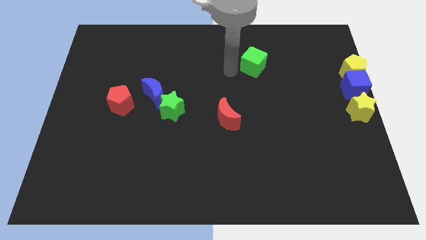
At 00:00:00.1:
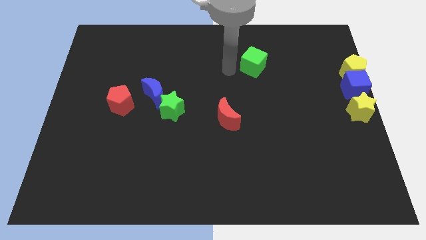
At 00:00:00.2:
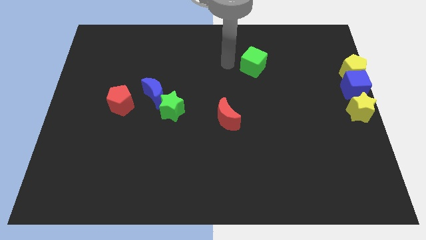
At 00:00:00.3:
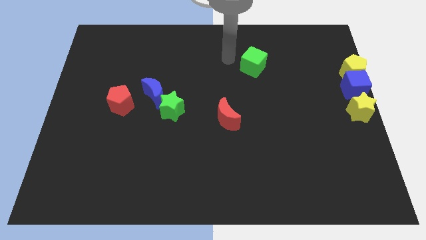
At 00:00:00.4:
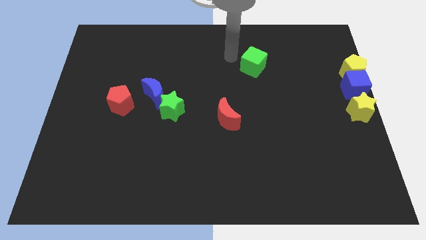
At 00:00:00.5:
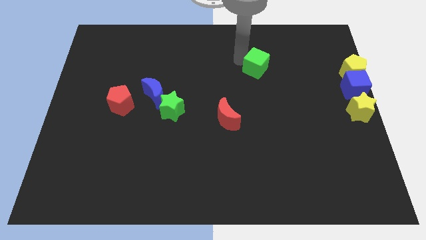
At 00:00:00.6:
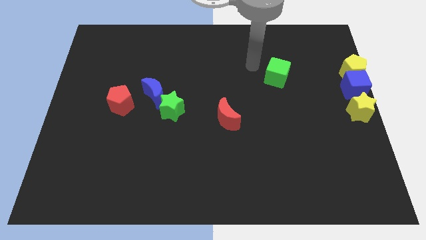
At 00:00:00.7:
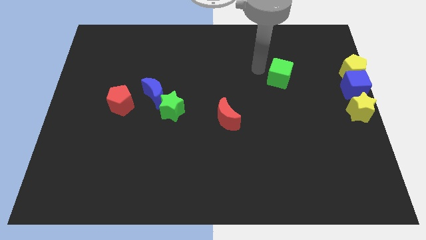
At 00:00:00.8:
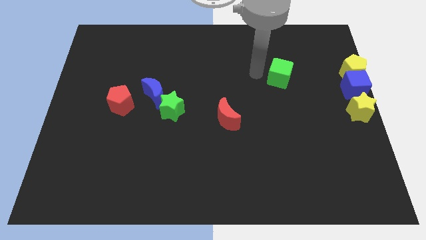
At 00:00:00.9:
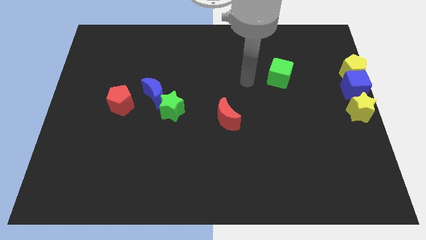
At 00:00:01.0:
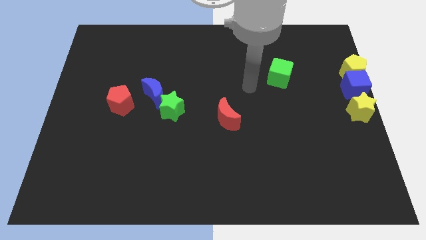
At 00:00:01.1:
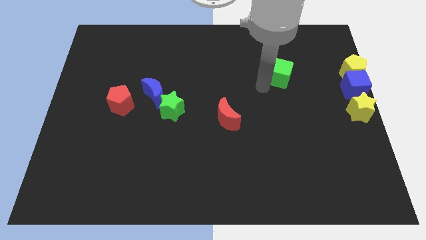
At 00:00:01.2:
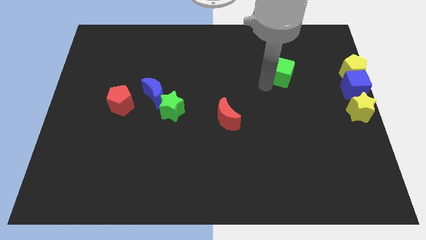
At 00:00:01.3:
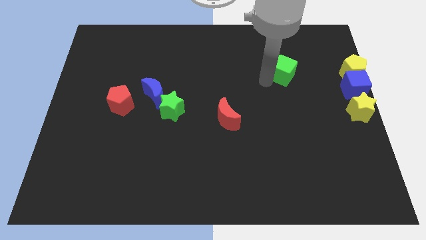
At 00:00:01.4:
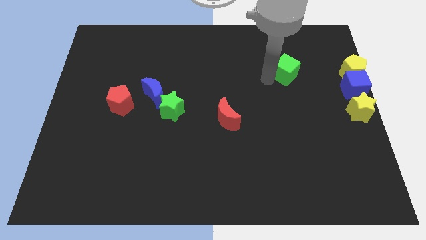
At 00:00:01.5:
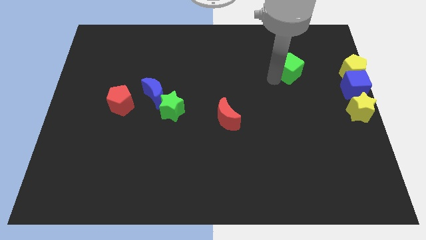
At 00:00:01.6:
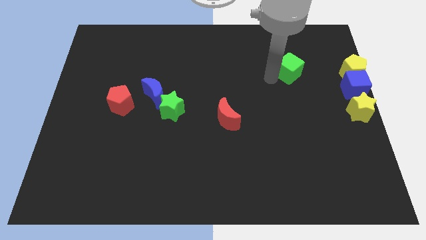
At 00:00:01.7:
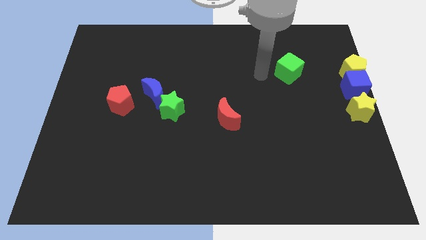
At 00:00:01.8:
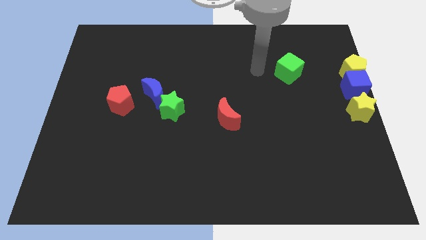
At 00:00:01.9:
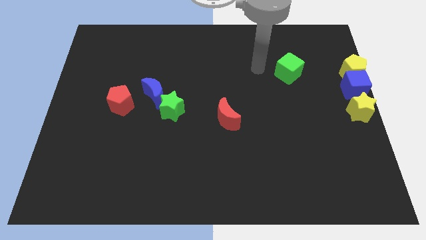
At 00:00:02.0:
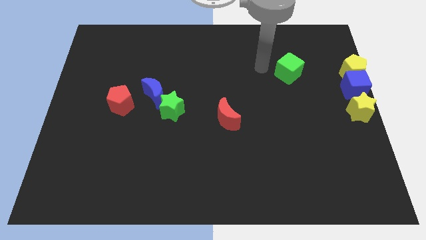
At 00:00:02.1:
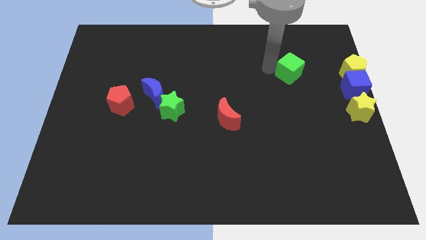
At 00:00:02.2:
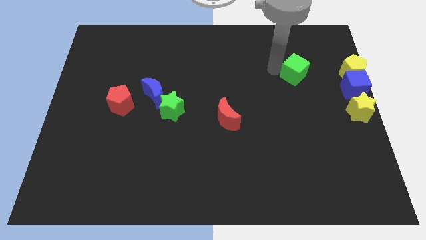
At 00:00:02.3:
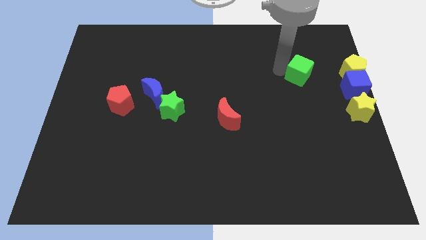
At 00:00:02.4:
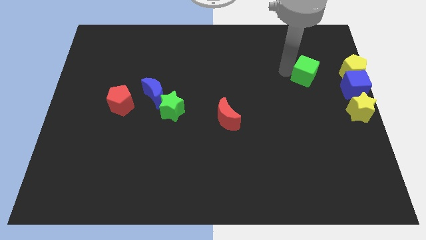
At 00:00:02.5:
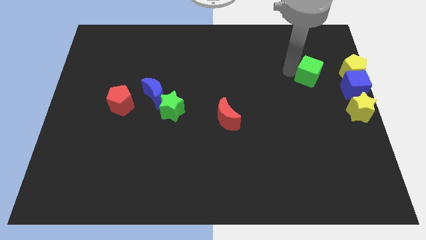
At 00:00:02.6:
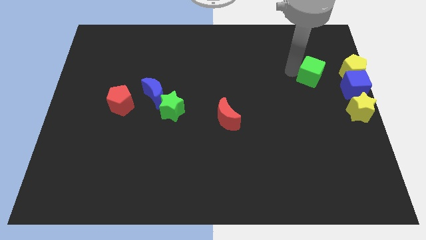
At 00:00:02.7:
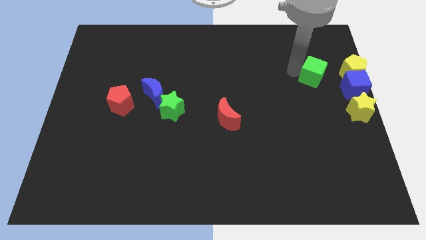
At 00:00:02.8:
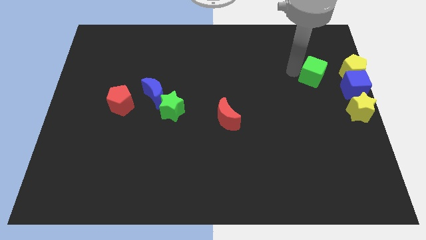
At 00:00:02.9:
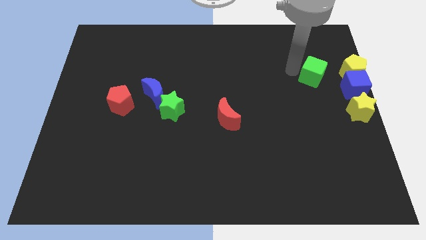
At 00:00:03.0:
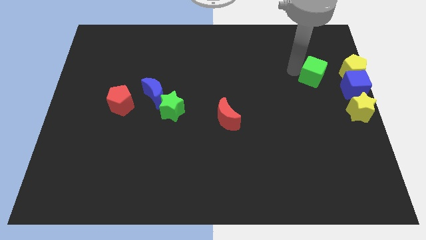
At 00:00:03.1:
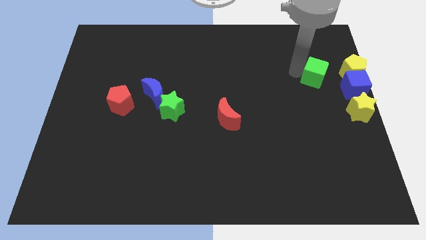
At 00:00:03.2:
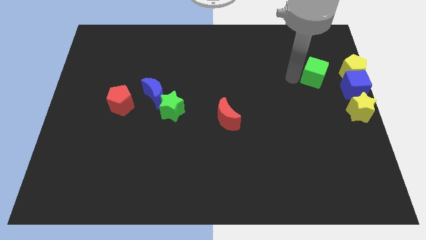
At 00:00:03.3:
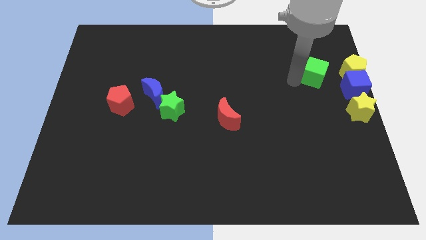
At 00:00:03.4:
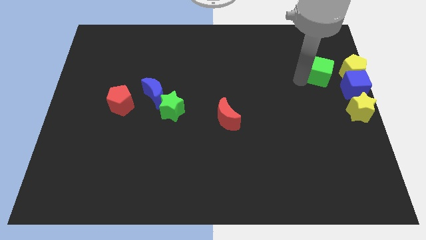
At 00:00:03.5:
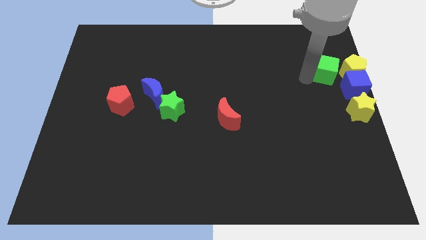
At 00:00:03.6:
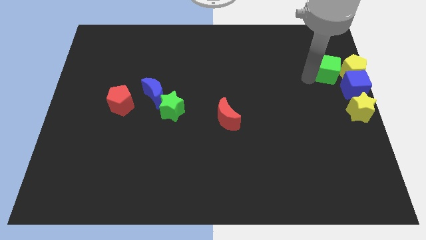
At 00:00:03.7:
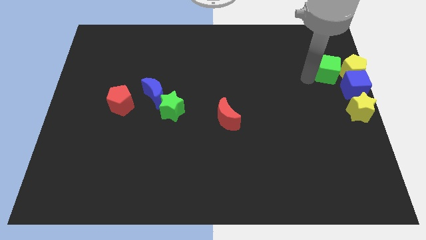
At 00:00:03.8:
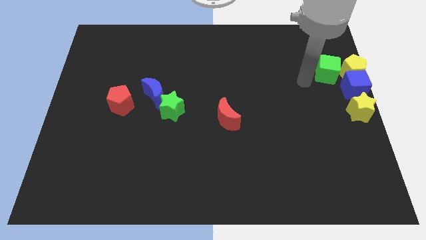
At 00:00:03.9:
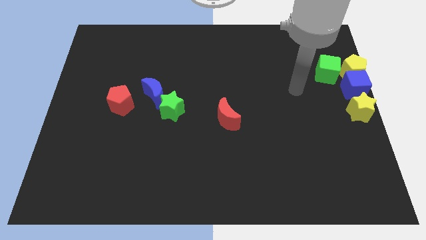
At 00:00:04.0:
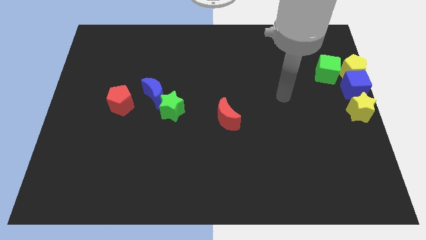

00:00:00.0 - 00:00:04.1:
move the green cube to the left of the yellow pentagon

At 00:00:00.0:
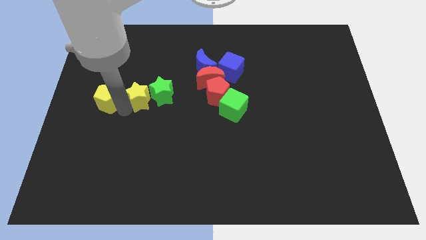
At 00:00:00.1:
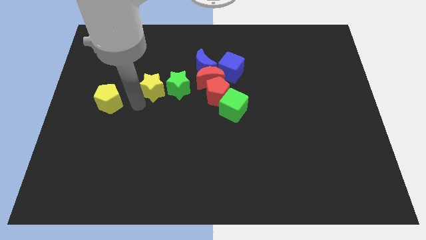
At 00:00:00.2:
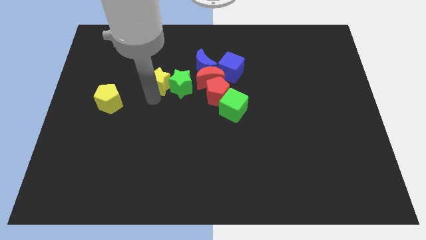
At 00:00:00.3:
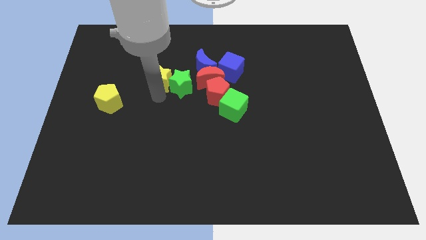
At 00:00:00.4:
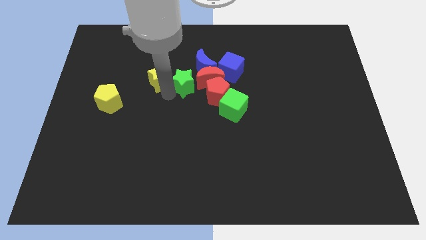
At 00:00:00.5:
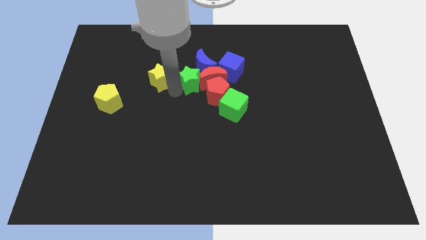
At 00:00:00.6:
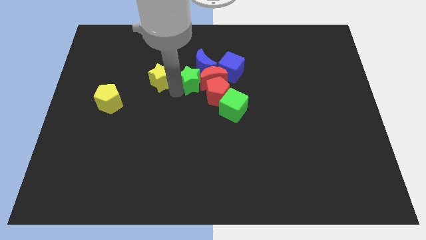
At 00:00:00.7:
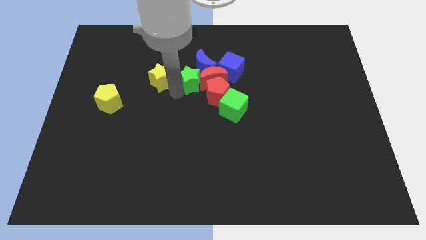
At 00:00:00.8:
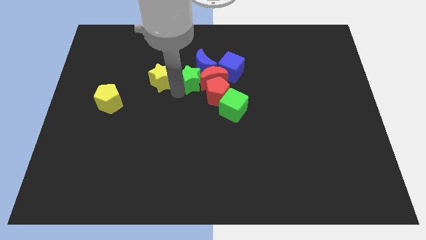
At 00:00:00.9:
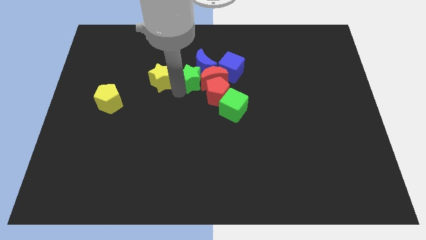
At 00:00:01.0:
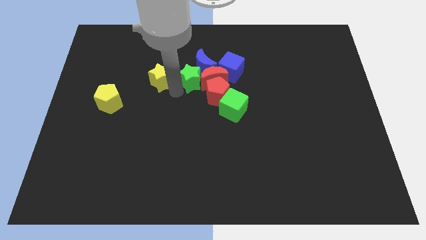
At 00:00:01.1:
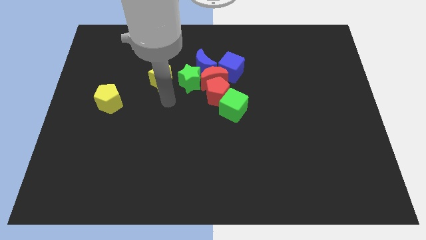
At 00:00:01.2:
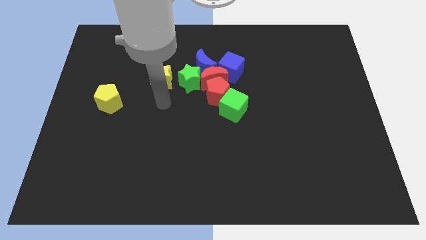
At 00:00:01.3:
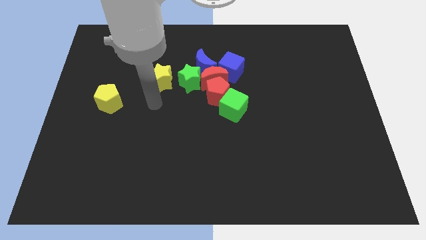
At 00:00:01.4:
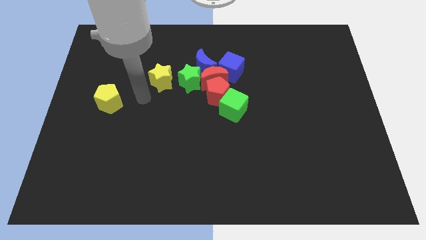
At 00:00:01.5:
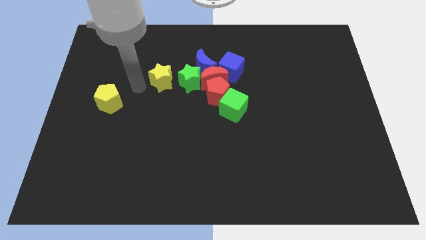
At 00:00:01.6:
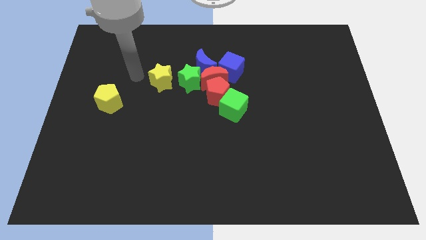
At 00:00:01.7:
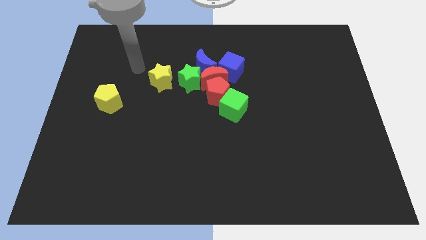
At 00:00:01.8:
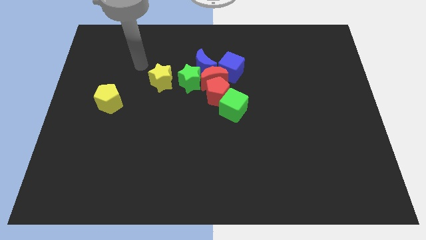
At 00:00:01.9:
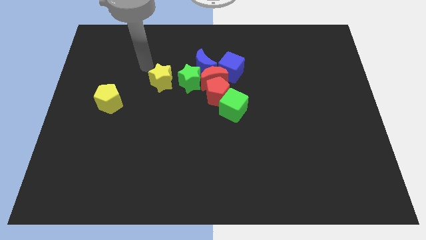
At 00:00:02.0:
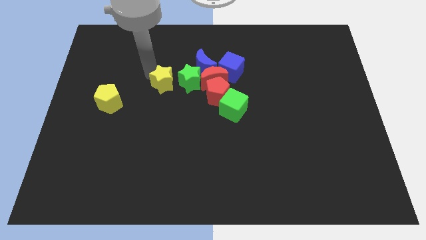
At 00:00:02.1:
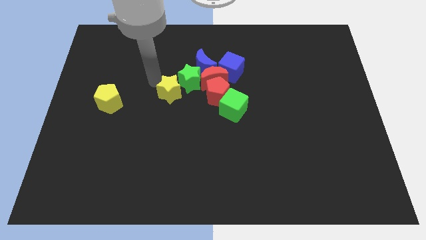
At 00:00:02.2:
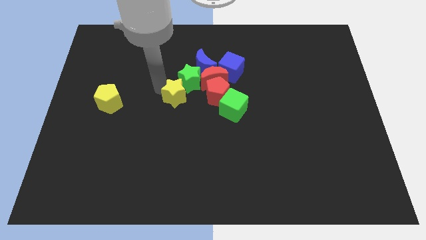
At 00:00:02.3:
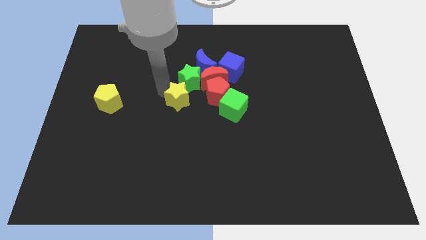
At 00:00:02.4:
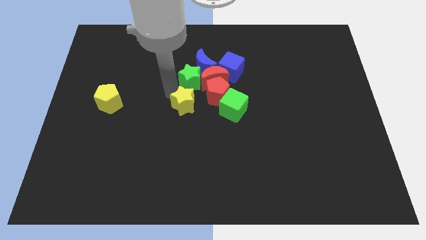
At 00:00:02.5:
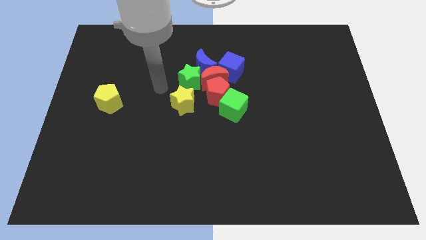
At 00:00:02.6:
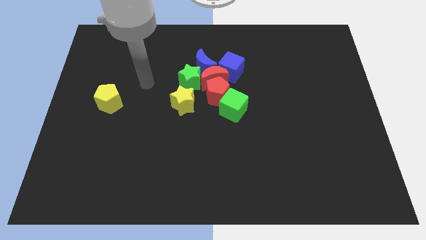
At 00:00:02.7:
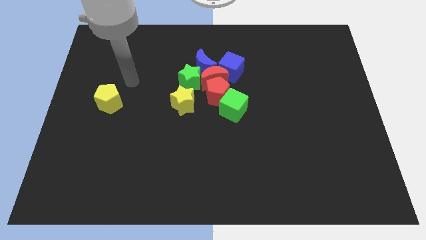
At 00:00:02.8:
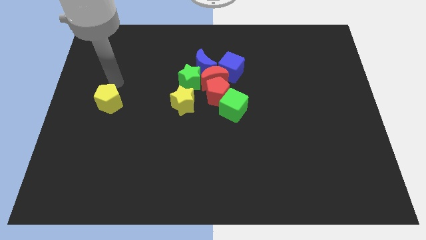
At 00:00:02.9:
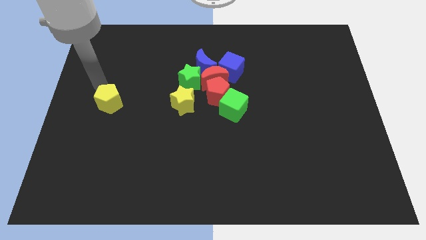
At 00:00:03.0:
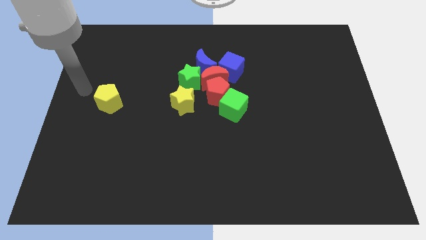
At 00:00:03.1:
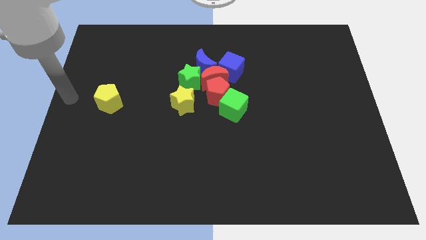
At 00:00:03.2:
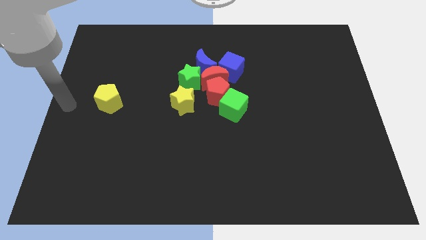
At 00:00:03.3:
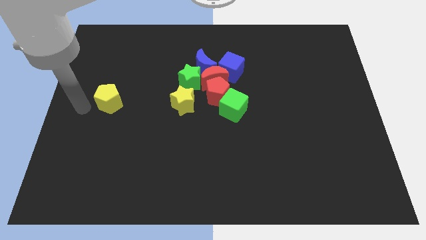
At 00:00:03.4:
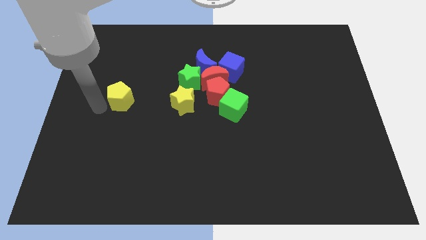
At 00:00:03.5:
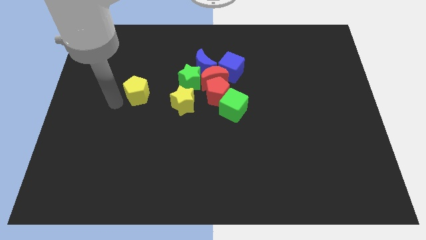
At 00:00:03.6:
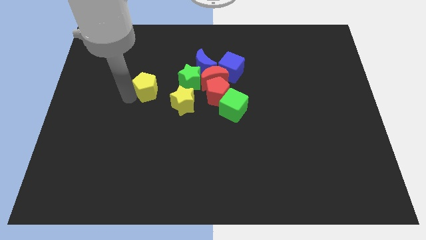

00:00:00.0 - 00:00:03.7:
move the yellow star below the green star

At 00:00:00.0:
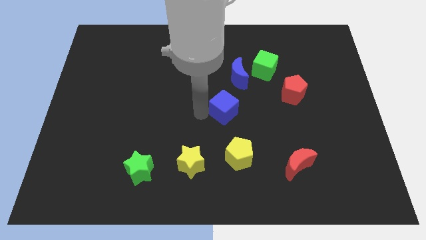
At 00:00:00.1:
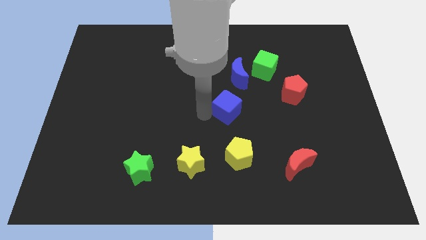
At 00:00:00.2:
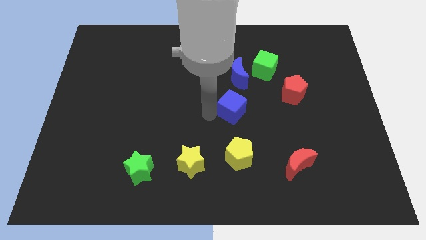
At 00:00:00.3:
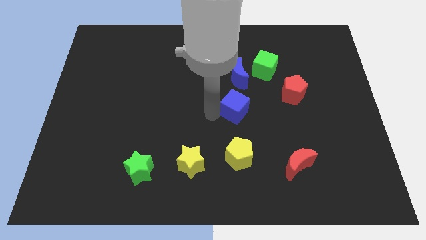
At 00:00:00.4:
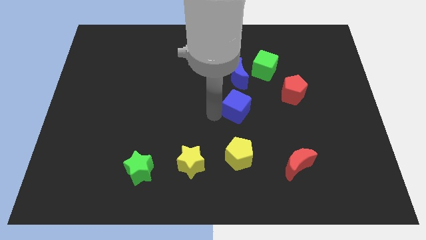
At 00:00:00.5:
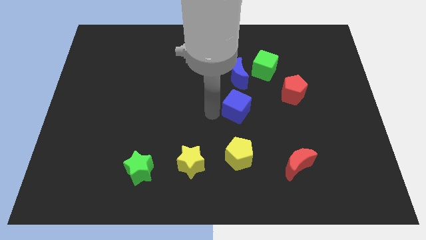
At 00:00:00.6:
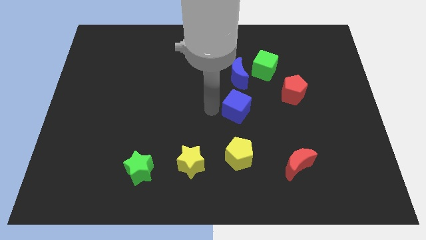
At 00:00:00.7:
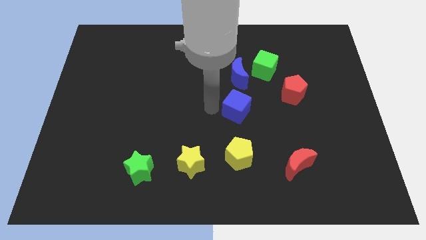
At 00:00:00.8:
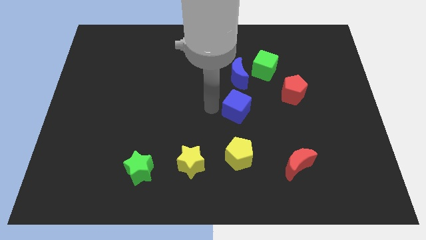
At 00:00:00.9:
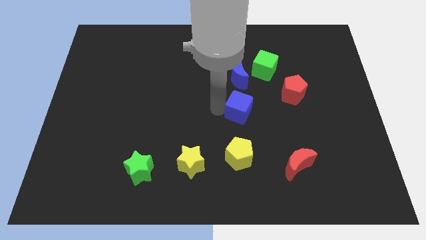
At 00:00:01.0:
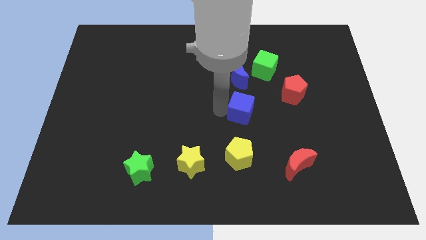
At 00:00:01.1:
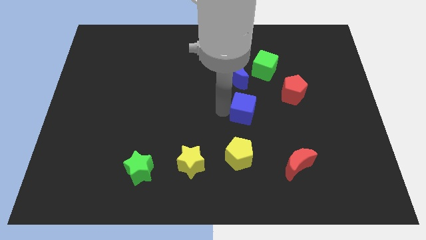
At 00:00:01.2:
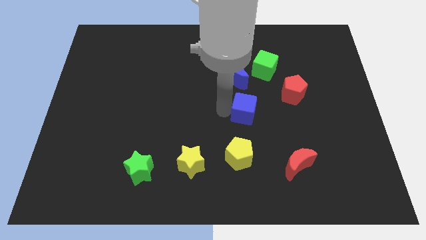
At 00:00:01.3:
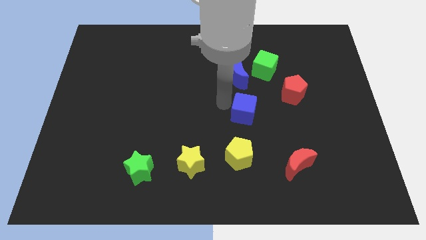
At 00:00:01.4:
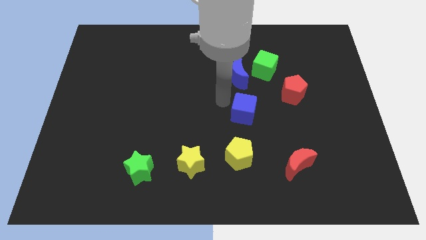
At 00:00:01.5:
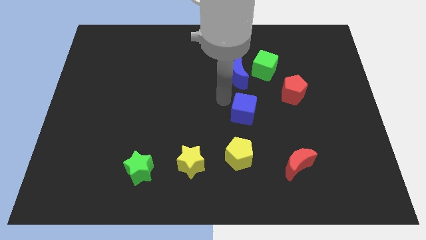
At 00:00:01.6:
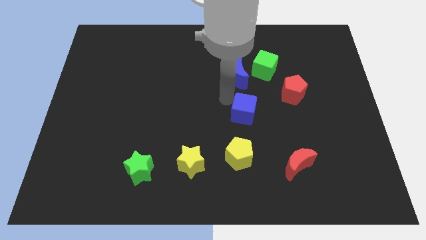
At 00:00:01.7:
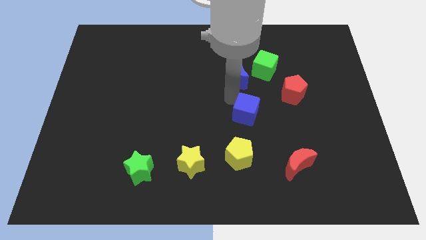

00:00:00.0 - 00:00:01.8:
move the blue cube in between the green cube and the yellow pentagon
